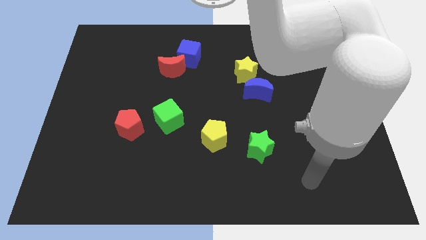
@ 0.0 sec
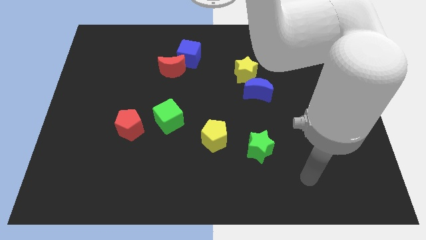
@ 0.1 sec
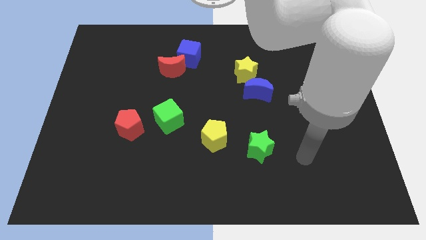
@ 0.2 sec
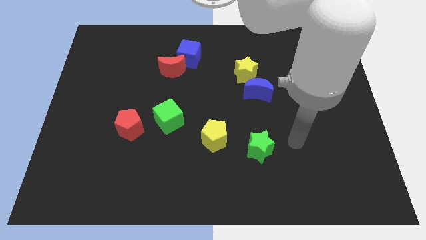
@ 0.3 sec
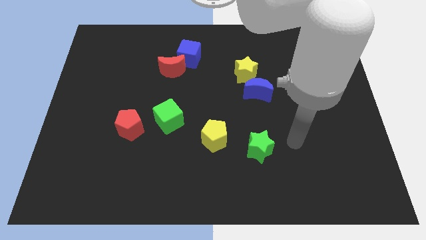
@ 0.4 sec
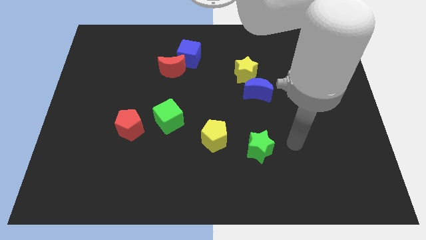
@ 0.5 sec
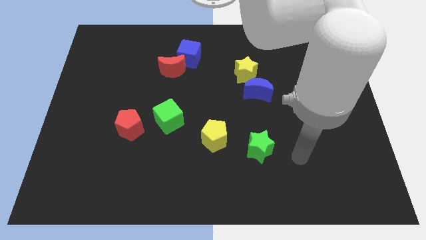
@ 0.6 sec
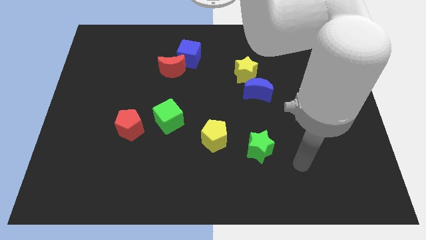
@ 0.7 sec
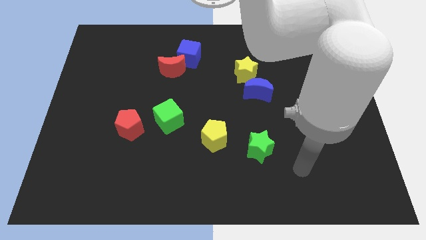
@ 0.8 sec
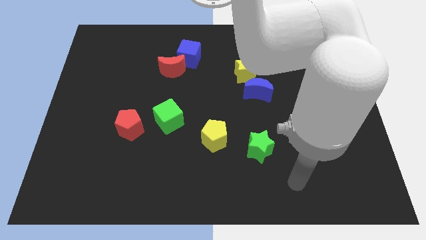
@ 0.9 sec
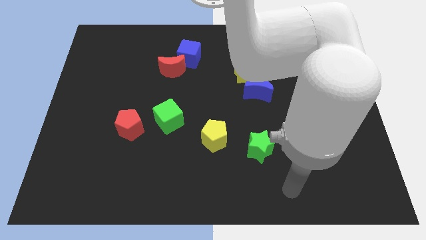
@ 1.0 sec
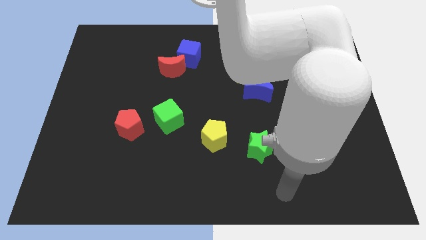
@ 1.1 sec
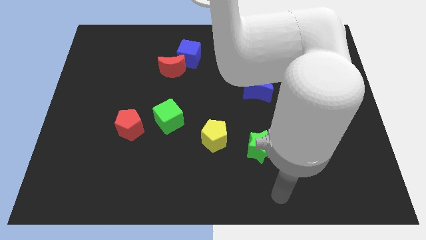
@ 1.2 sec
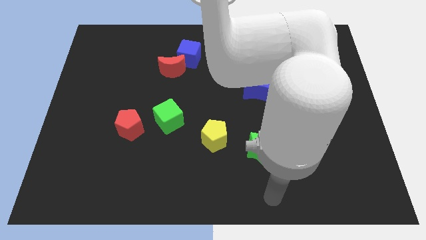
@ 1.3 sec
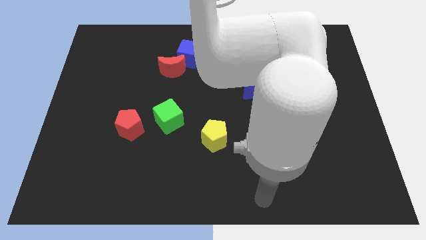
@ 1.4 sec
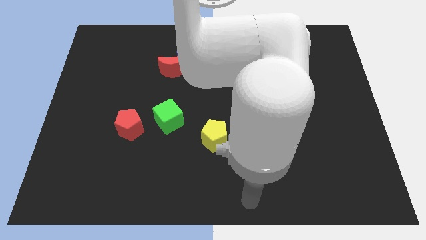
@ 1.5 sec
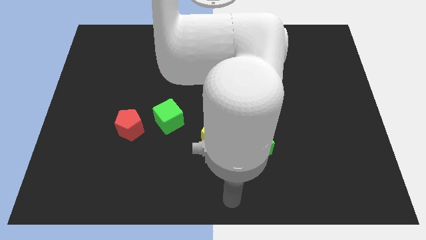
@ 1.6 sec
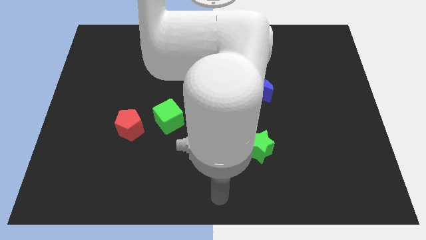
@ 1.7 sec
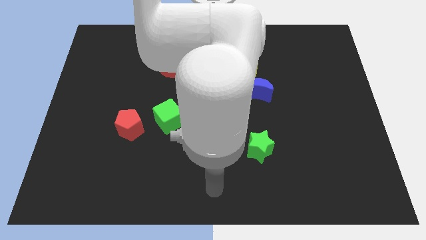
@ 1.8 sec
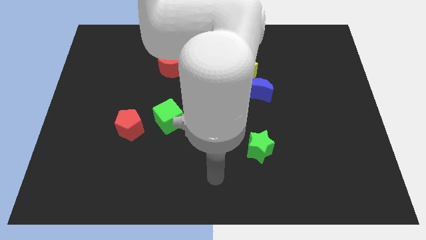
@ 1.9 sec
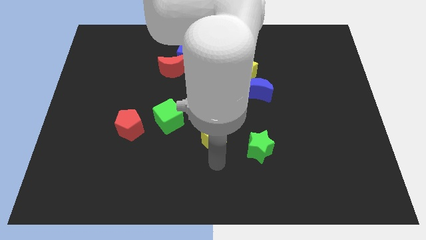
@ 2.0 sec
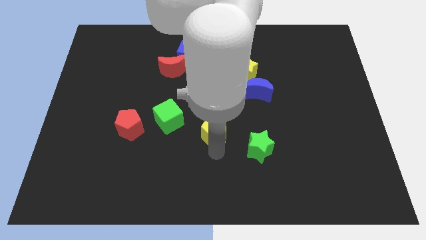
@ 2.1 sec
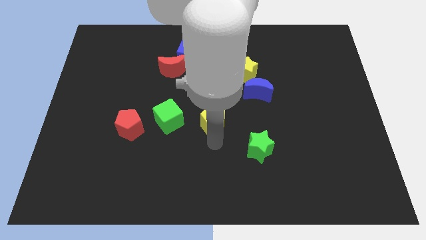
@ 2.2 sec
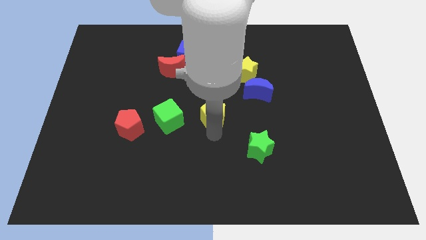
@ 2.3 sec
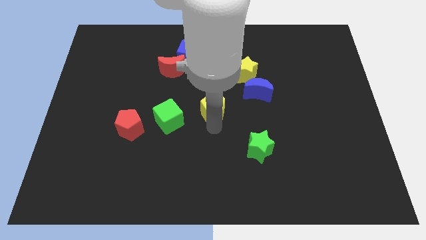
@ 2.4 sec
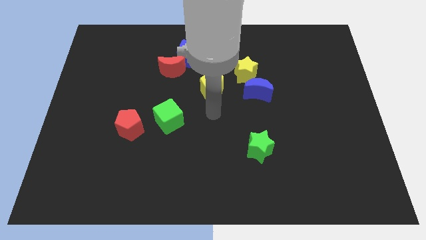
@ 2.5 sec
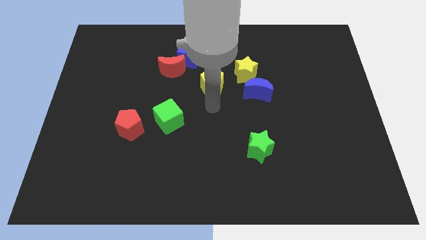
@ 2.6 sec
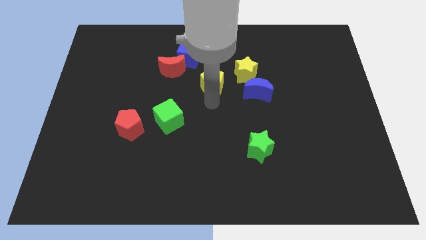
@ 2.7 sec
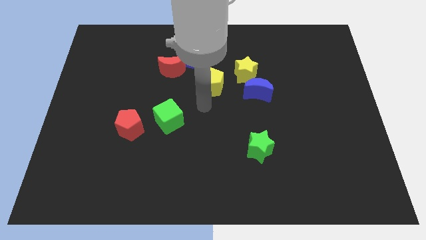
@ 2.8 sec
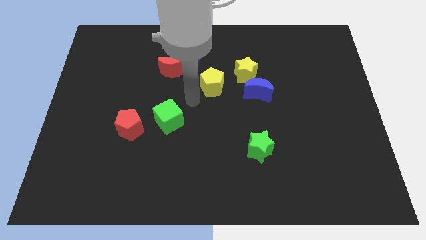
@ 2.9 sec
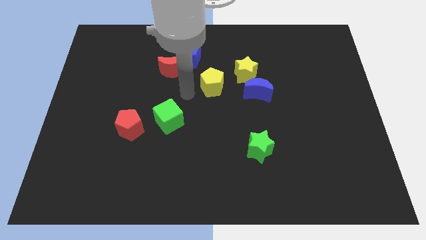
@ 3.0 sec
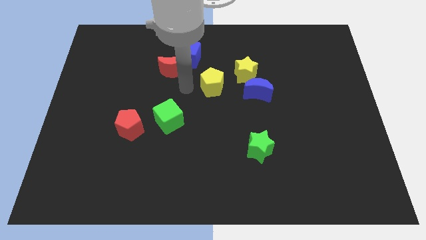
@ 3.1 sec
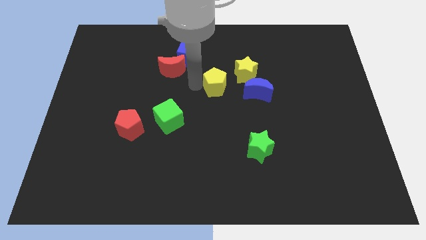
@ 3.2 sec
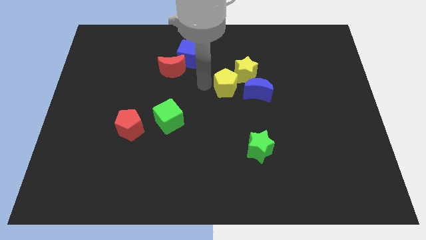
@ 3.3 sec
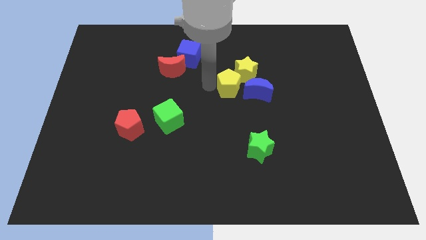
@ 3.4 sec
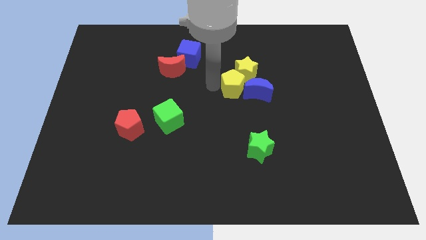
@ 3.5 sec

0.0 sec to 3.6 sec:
slide the yellow pentagon towards the yellow star

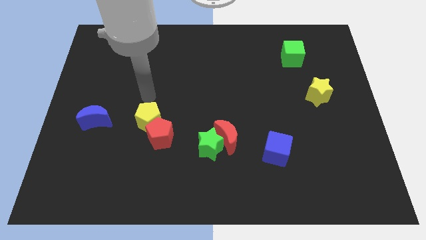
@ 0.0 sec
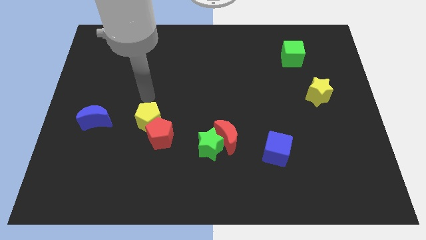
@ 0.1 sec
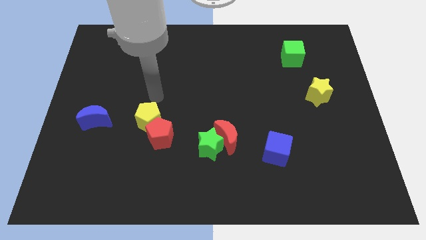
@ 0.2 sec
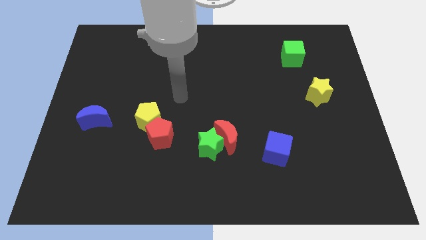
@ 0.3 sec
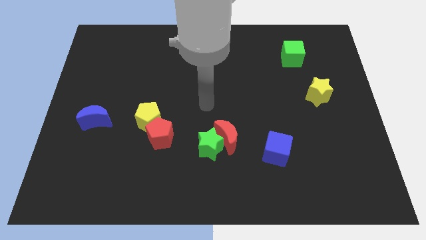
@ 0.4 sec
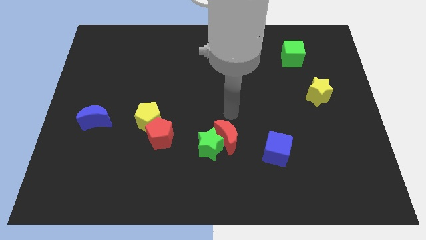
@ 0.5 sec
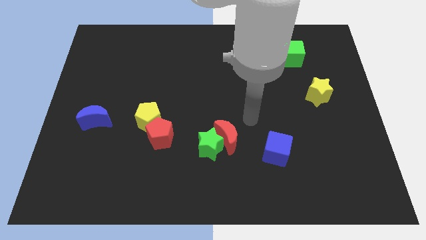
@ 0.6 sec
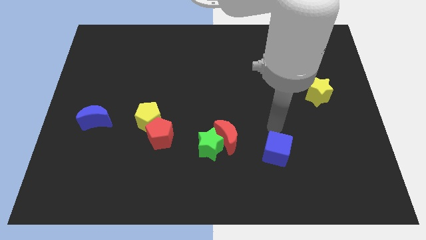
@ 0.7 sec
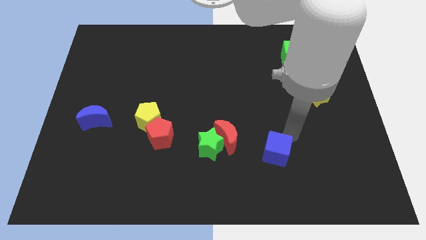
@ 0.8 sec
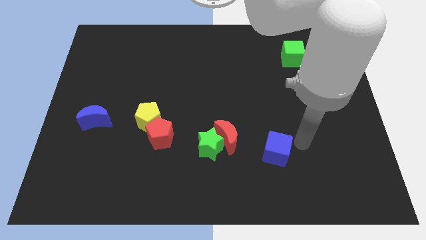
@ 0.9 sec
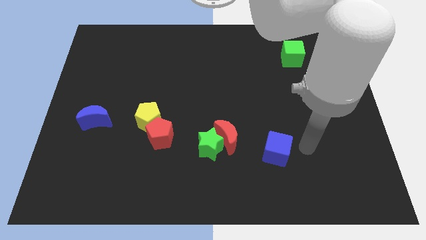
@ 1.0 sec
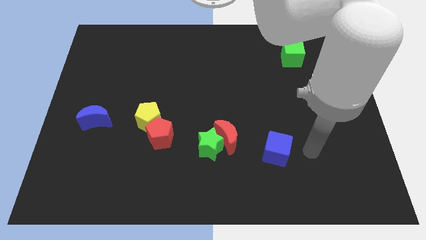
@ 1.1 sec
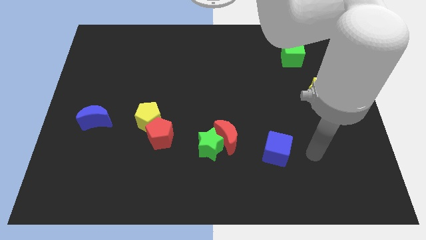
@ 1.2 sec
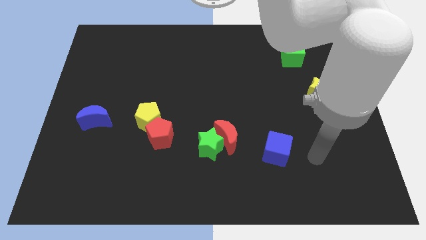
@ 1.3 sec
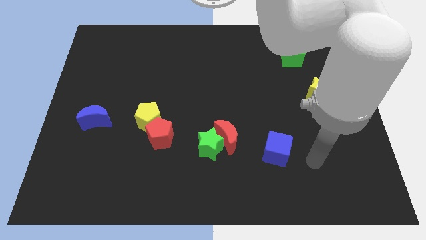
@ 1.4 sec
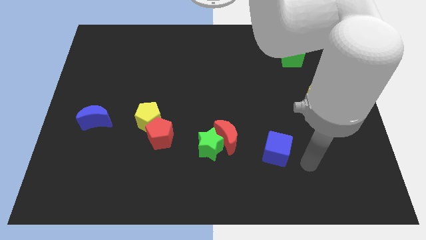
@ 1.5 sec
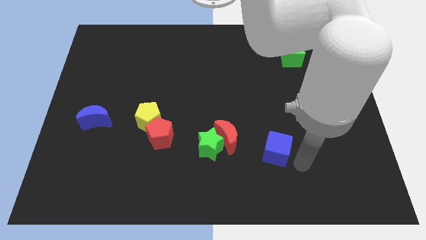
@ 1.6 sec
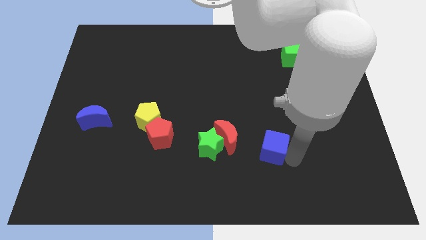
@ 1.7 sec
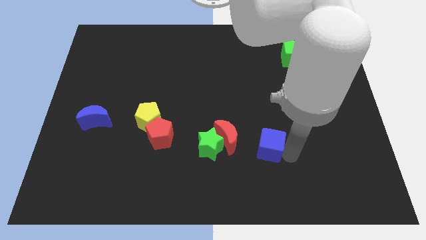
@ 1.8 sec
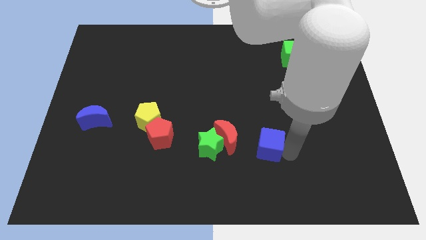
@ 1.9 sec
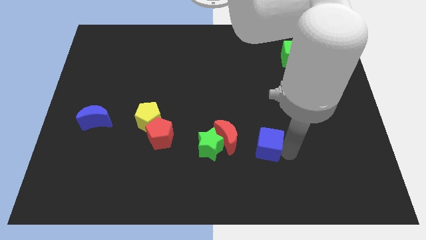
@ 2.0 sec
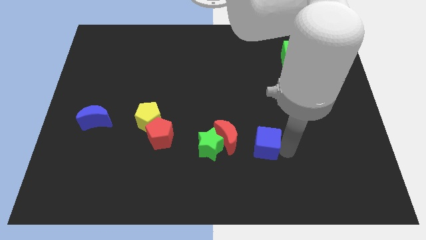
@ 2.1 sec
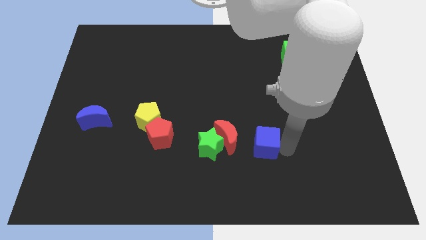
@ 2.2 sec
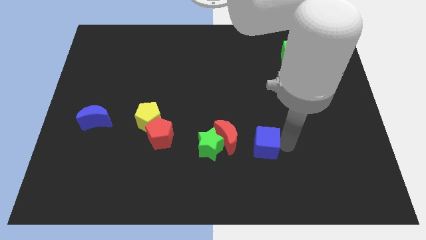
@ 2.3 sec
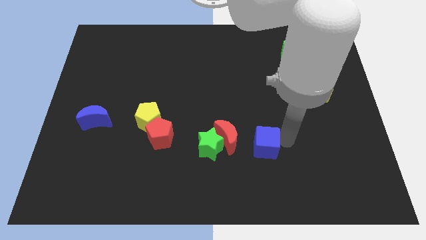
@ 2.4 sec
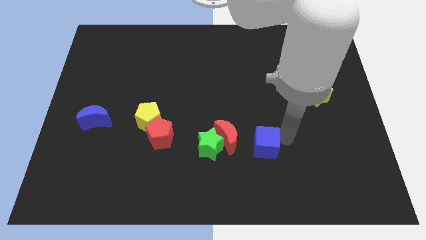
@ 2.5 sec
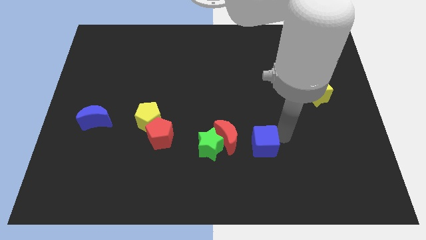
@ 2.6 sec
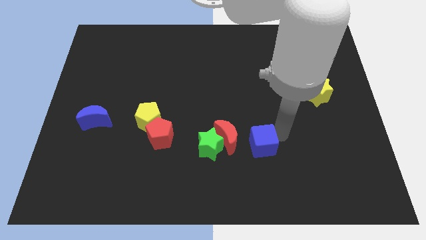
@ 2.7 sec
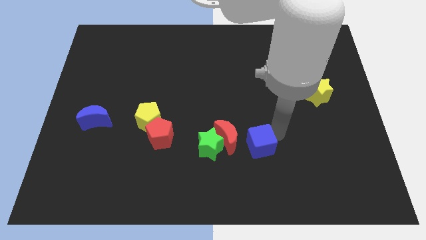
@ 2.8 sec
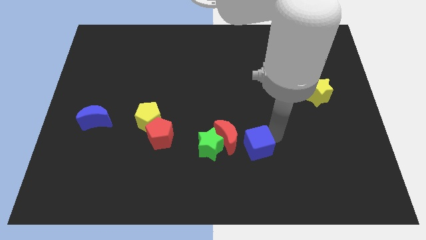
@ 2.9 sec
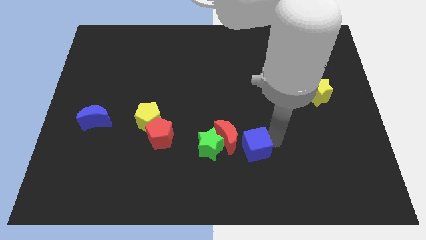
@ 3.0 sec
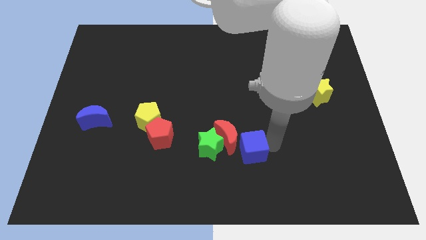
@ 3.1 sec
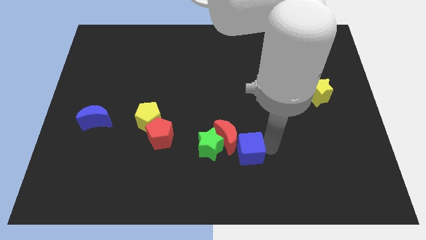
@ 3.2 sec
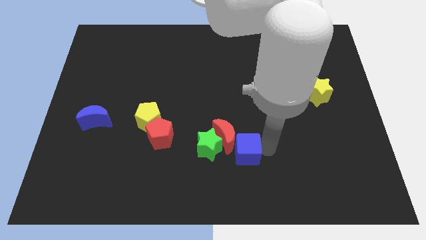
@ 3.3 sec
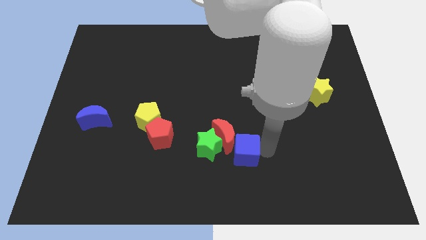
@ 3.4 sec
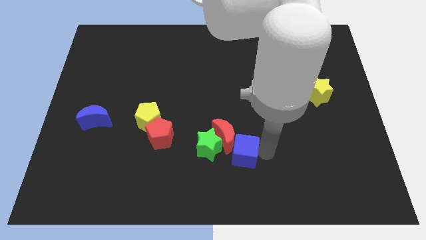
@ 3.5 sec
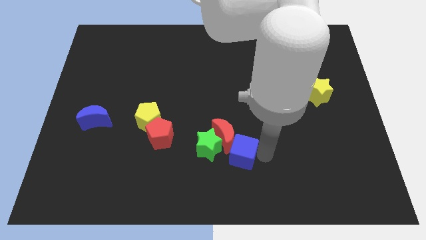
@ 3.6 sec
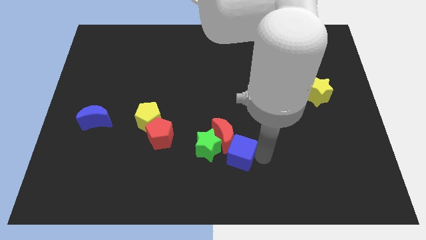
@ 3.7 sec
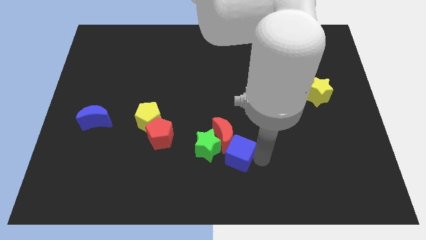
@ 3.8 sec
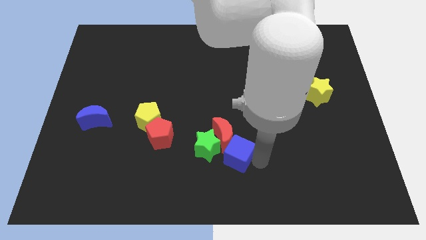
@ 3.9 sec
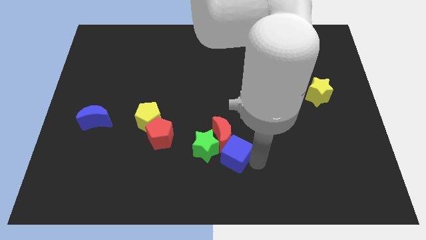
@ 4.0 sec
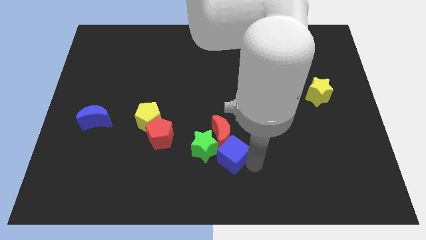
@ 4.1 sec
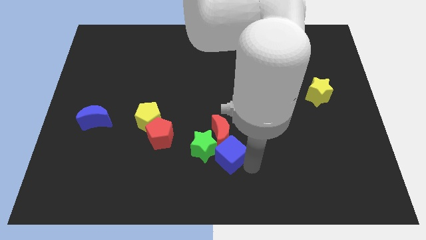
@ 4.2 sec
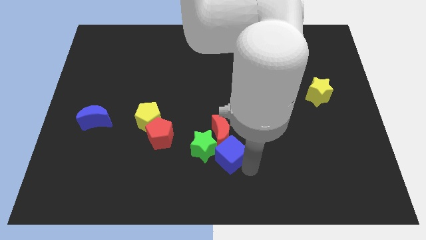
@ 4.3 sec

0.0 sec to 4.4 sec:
push the blue cube to the green star

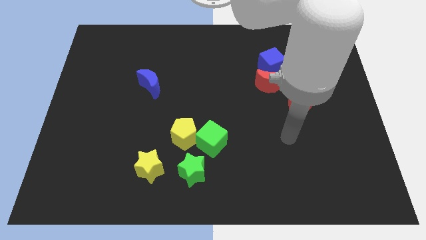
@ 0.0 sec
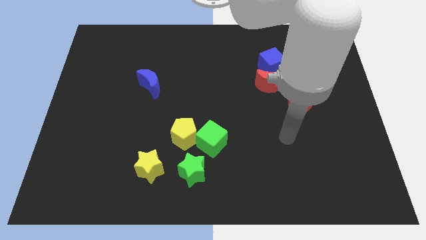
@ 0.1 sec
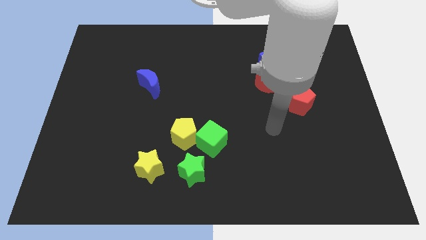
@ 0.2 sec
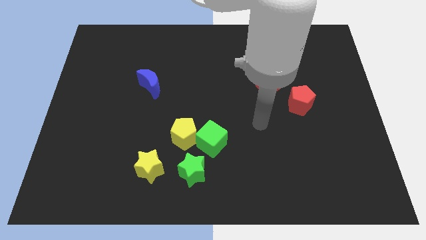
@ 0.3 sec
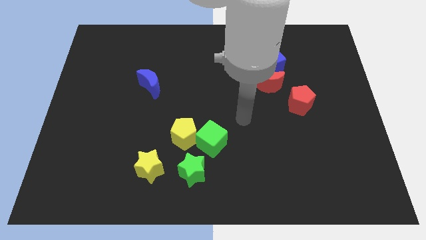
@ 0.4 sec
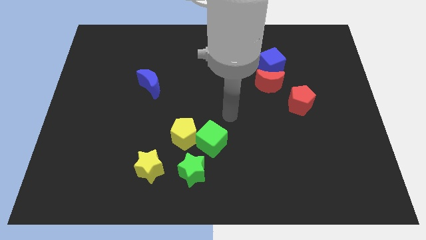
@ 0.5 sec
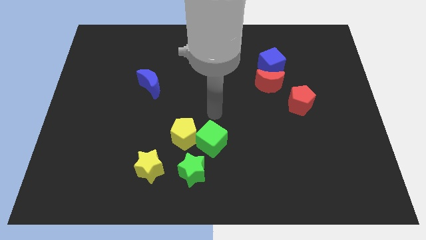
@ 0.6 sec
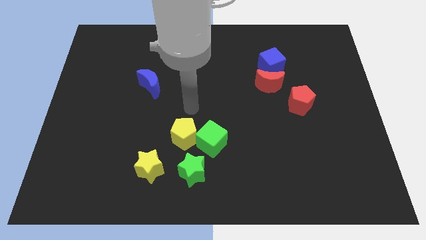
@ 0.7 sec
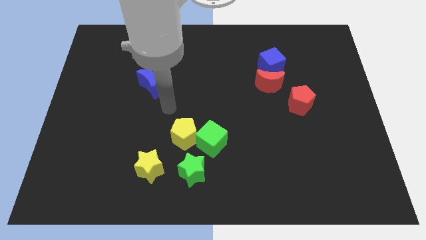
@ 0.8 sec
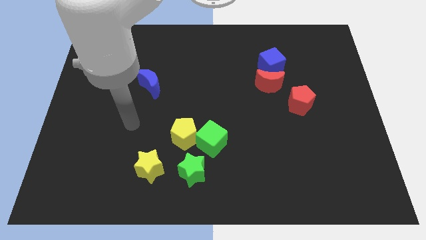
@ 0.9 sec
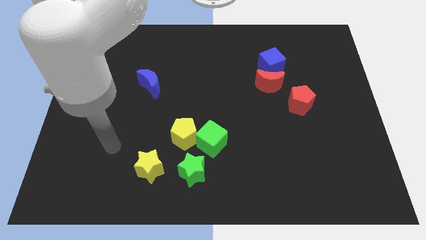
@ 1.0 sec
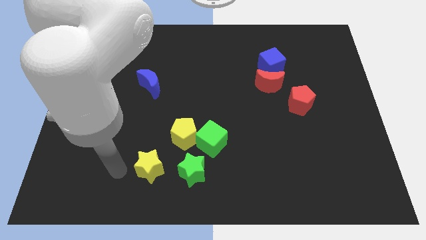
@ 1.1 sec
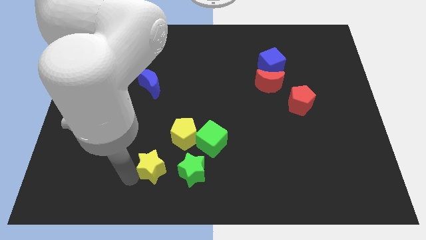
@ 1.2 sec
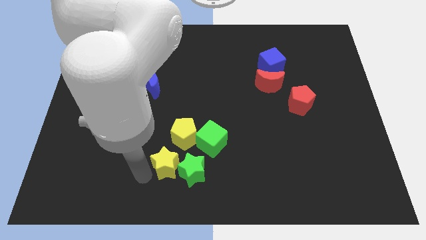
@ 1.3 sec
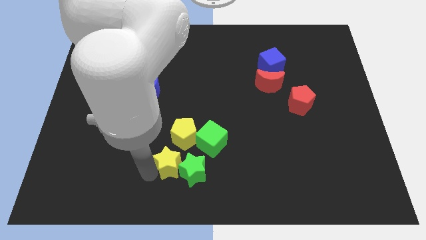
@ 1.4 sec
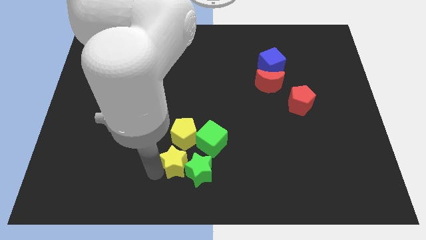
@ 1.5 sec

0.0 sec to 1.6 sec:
put the yellow star towards the green star
